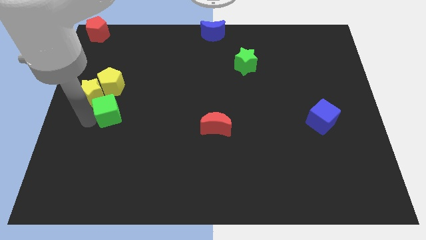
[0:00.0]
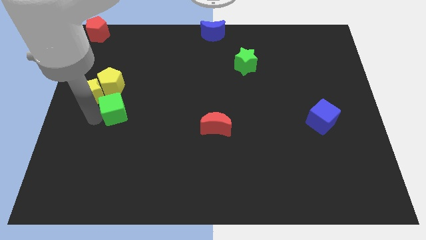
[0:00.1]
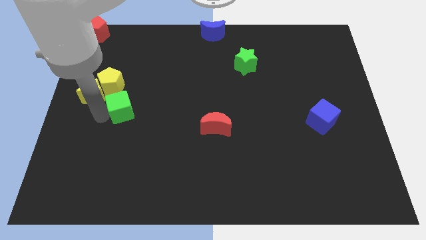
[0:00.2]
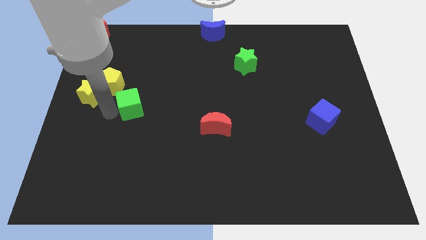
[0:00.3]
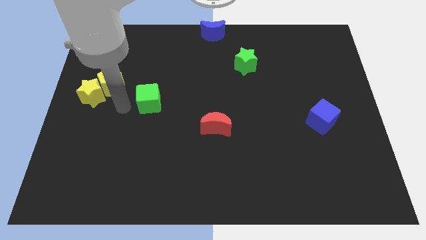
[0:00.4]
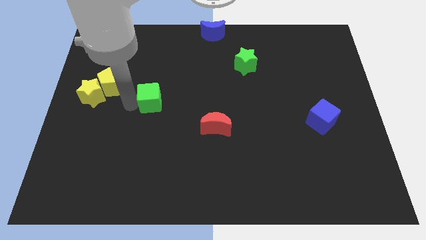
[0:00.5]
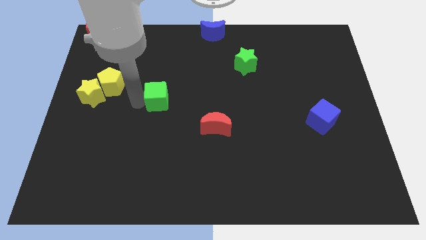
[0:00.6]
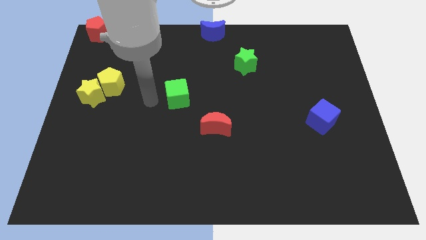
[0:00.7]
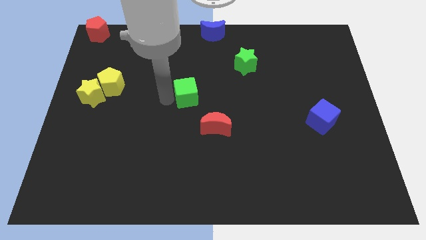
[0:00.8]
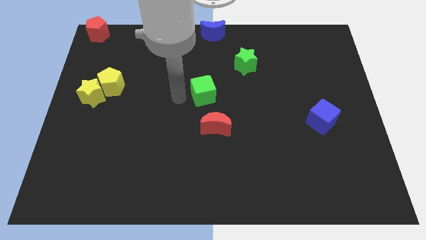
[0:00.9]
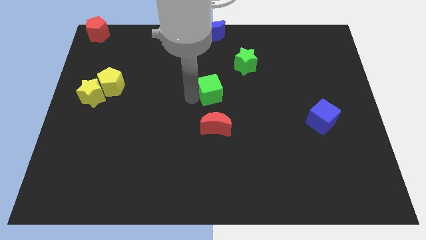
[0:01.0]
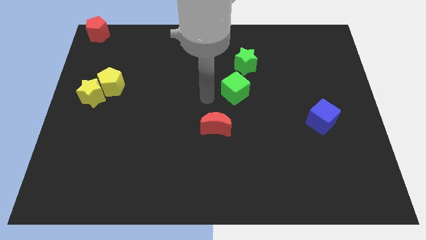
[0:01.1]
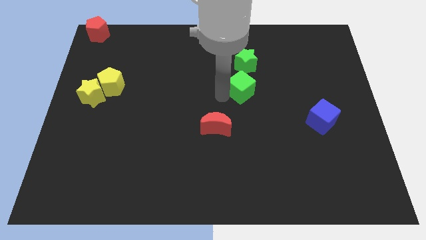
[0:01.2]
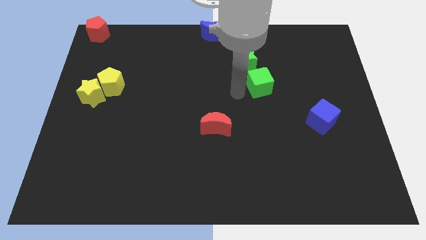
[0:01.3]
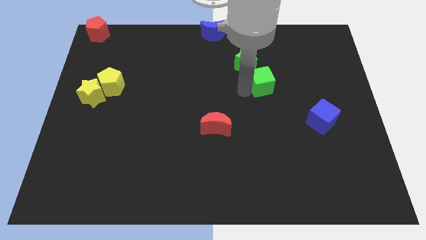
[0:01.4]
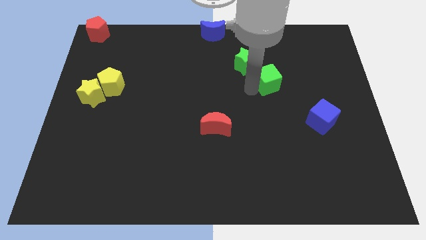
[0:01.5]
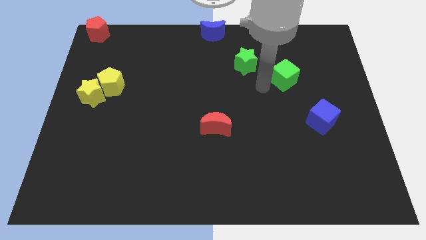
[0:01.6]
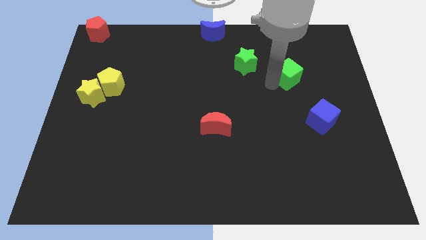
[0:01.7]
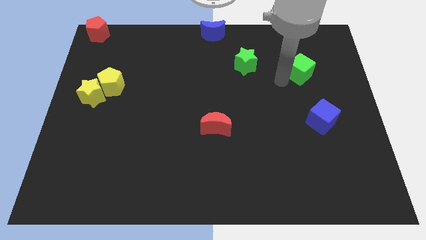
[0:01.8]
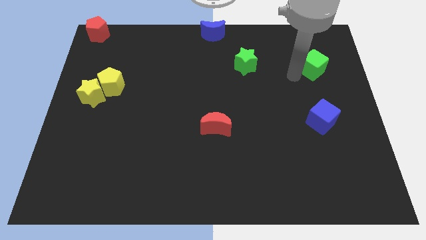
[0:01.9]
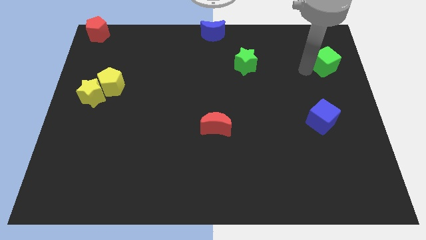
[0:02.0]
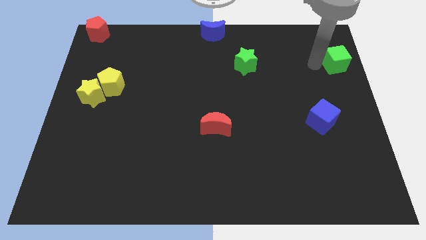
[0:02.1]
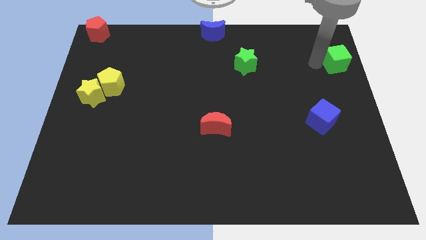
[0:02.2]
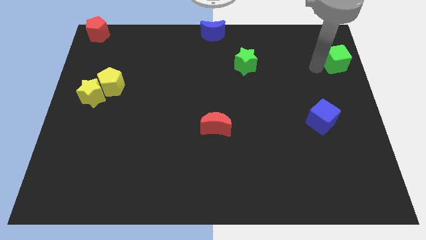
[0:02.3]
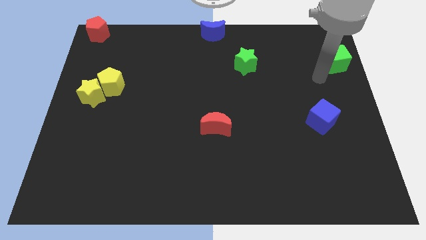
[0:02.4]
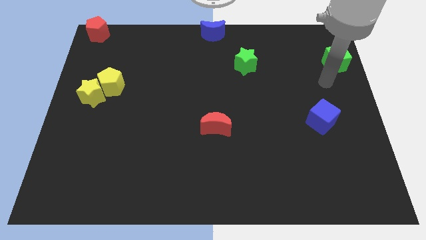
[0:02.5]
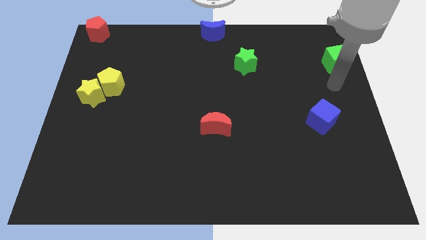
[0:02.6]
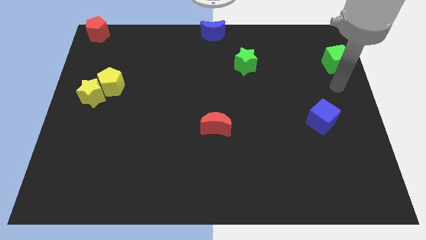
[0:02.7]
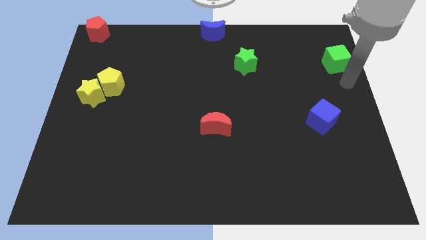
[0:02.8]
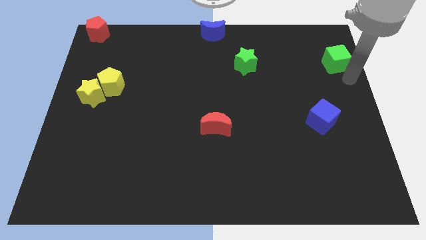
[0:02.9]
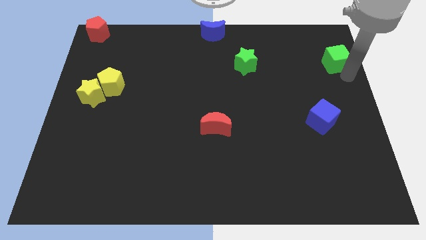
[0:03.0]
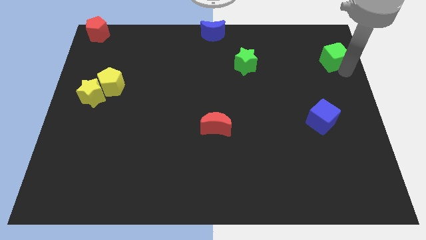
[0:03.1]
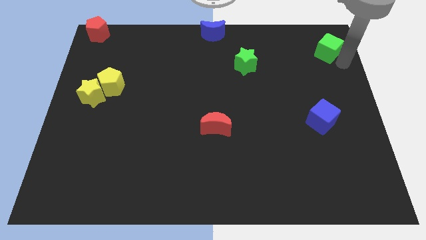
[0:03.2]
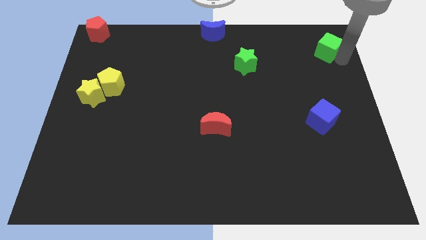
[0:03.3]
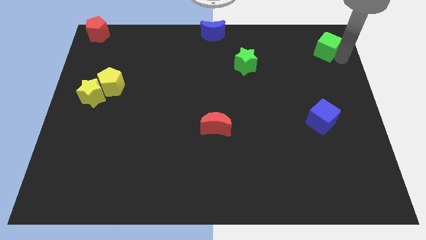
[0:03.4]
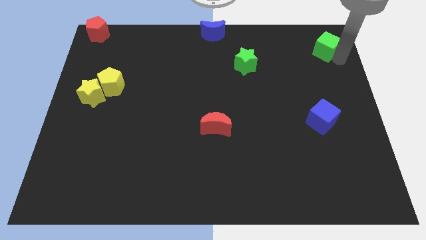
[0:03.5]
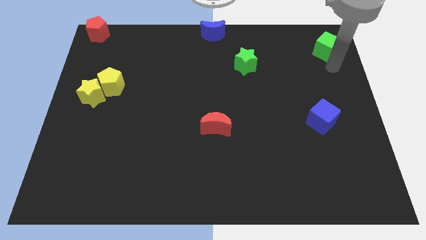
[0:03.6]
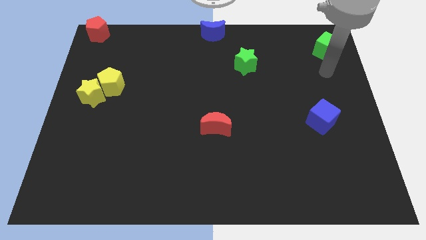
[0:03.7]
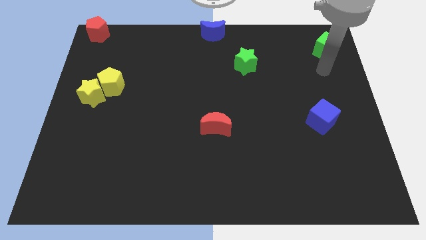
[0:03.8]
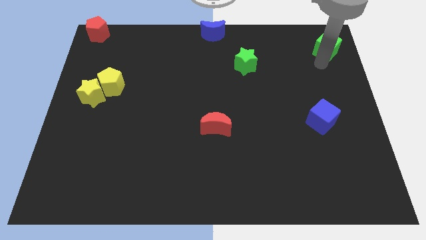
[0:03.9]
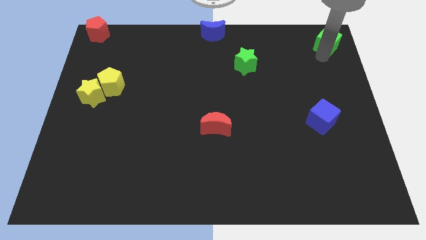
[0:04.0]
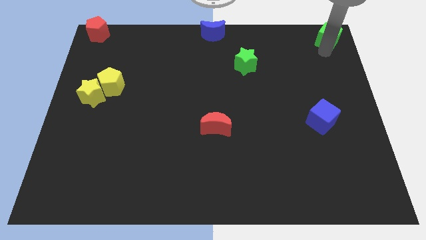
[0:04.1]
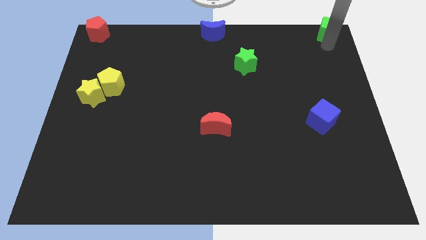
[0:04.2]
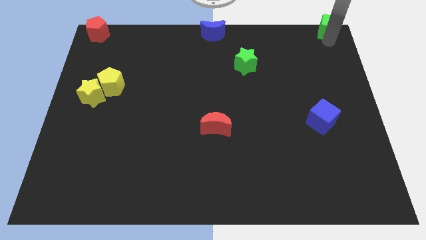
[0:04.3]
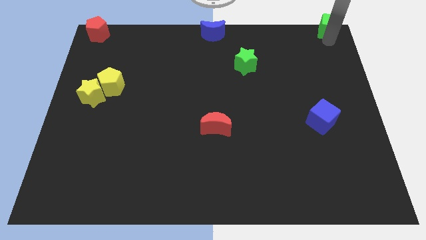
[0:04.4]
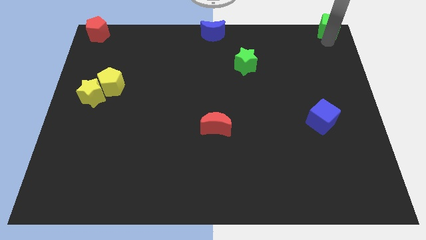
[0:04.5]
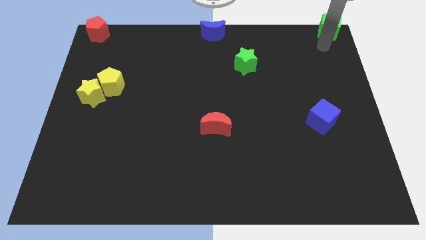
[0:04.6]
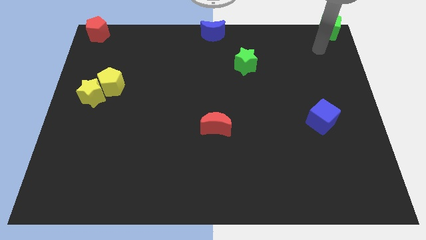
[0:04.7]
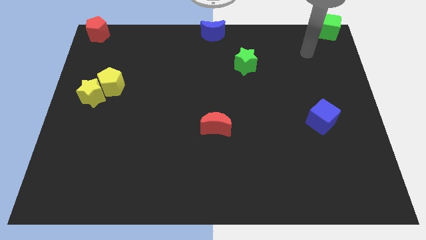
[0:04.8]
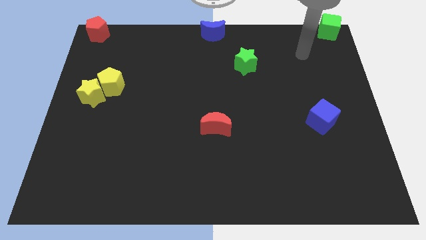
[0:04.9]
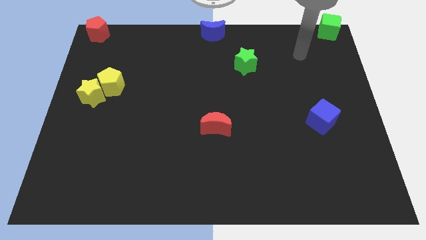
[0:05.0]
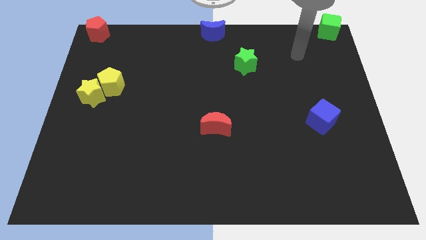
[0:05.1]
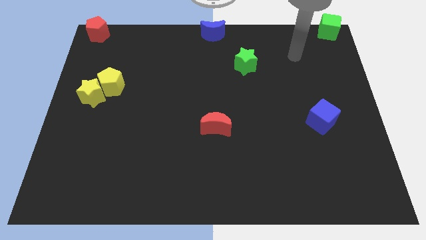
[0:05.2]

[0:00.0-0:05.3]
move the green cube to the top right corner

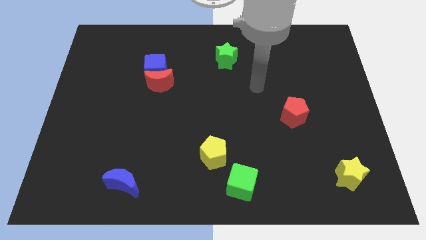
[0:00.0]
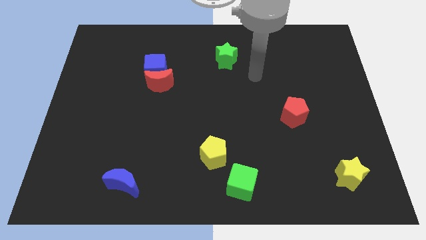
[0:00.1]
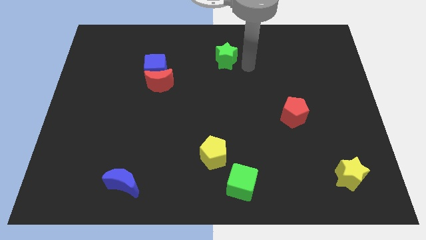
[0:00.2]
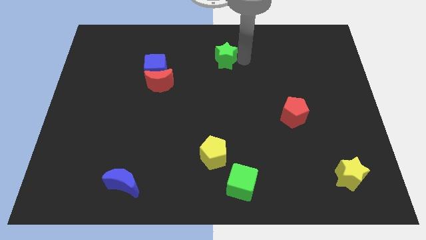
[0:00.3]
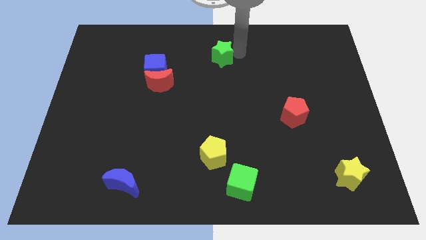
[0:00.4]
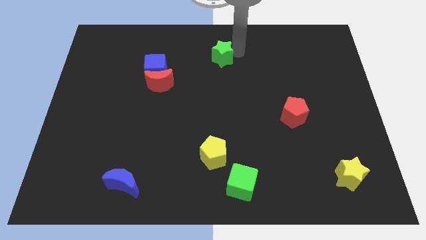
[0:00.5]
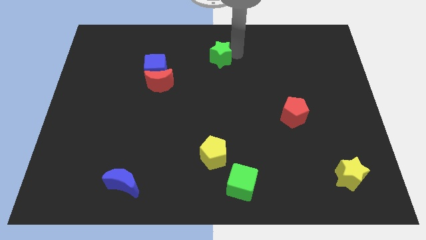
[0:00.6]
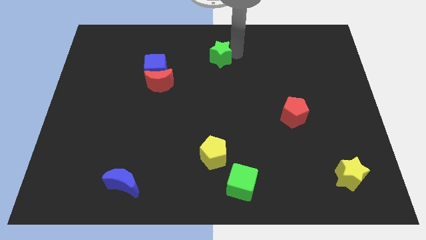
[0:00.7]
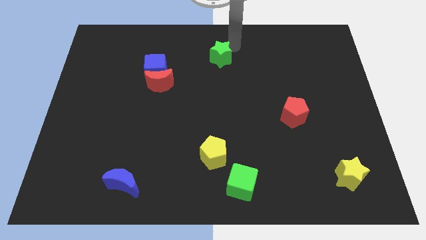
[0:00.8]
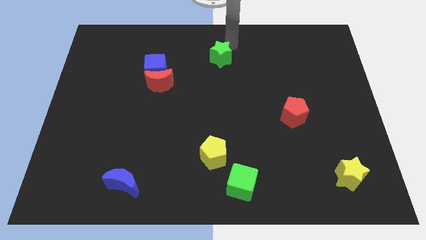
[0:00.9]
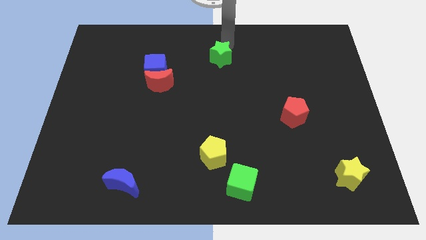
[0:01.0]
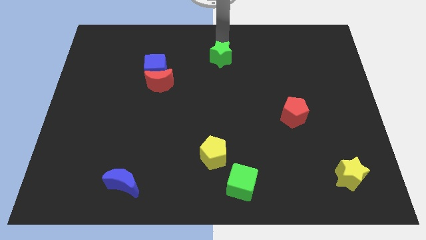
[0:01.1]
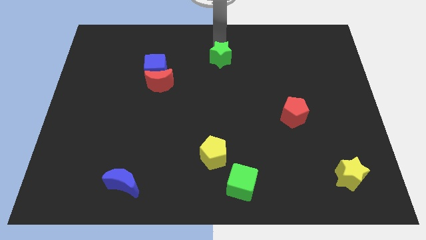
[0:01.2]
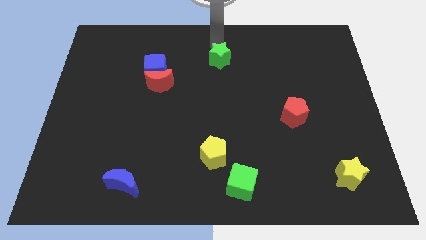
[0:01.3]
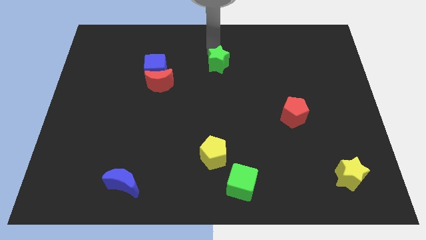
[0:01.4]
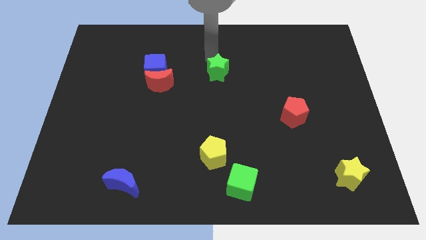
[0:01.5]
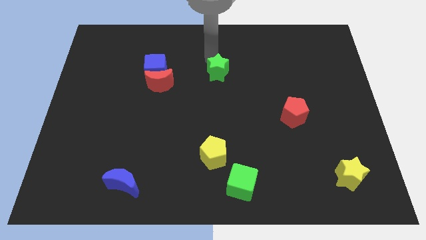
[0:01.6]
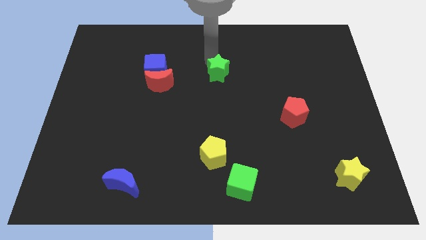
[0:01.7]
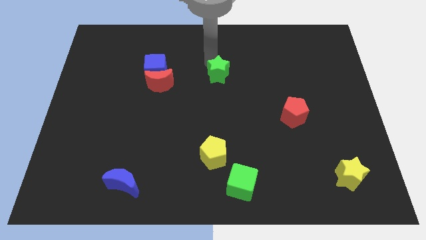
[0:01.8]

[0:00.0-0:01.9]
push the green star slightly downwards

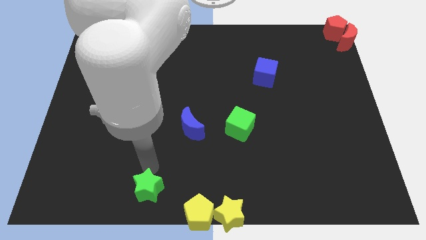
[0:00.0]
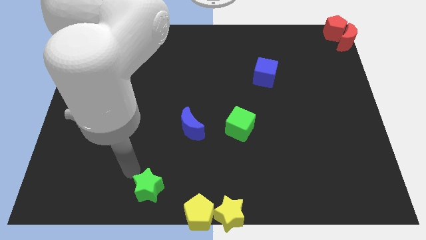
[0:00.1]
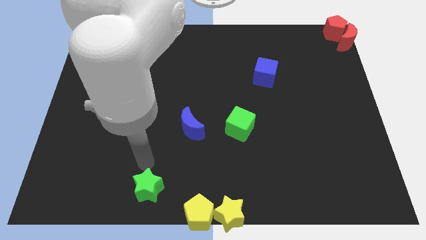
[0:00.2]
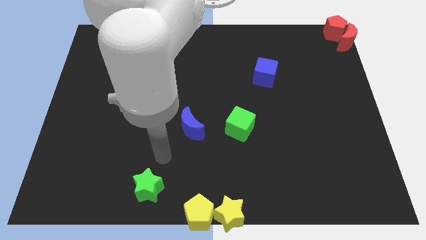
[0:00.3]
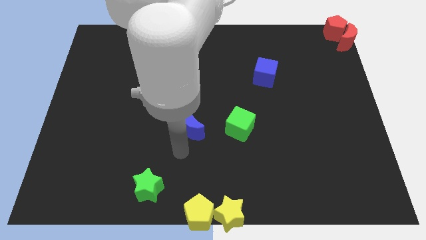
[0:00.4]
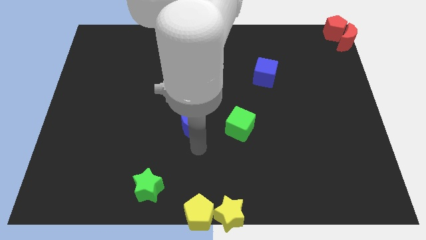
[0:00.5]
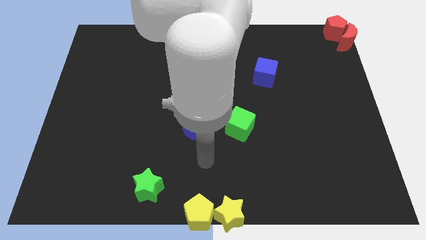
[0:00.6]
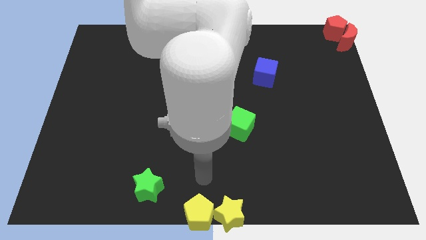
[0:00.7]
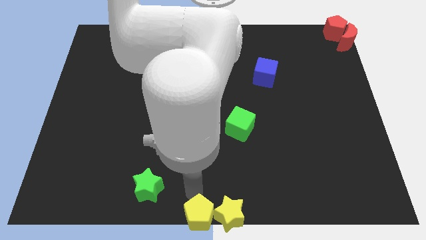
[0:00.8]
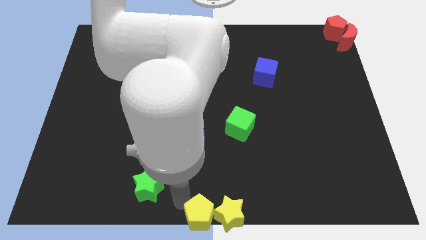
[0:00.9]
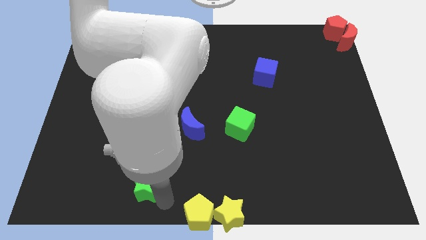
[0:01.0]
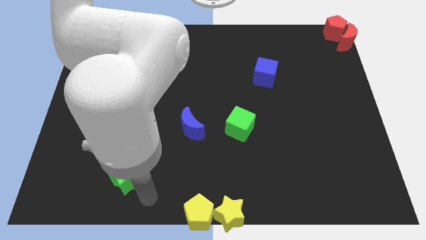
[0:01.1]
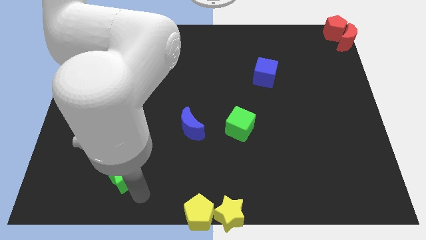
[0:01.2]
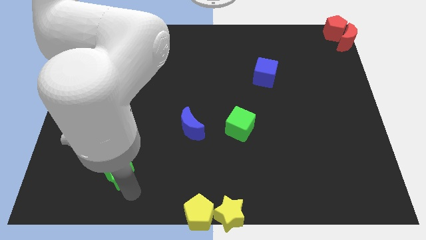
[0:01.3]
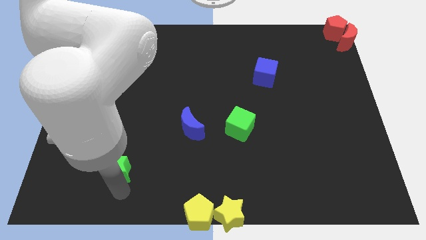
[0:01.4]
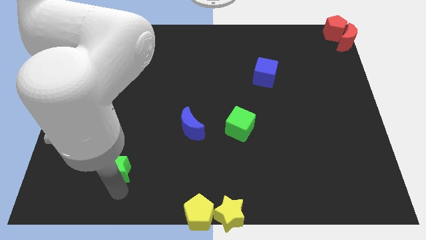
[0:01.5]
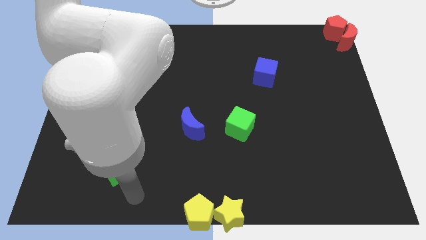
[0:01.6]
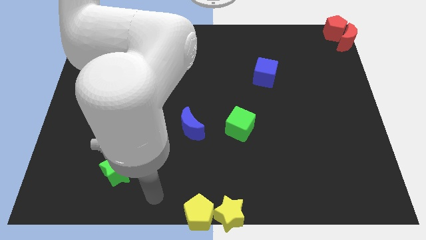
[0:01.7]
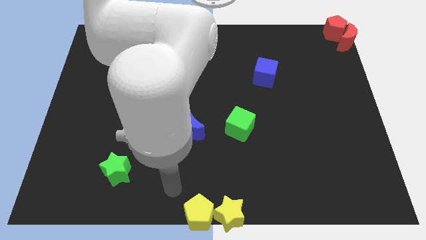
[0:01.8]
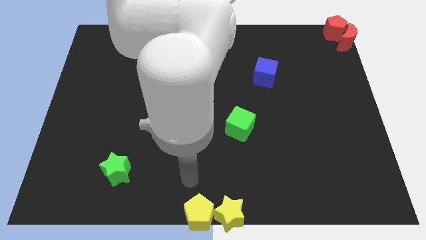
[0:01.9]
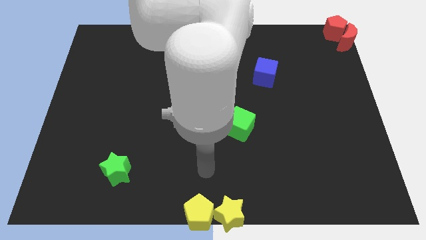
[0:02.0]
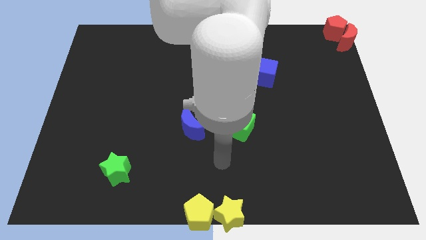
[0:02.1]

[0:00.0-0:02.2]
move the green star diagonally on the left side
